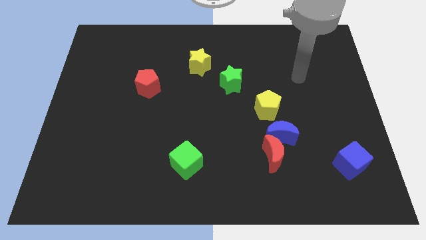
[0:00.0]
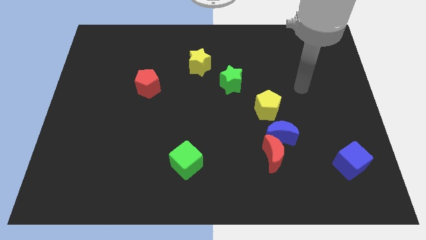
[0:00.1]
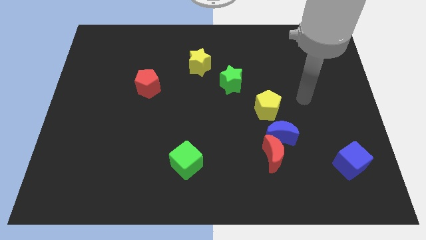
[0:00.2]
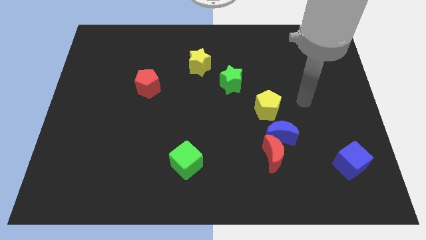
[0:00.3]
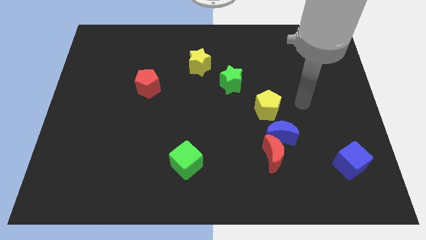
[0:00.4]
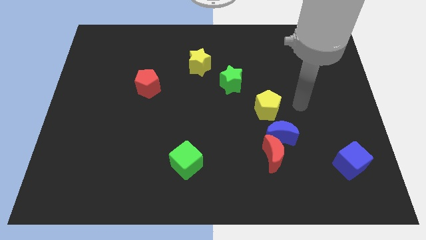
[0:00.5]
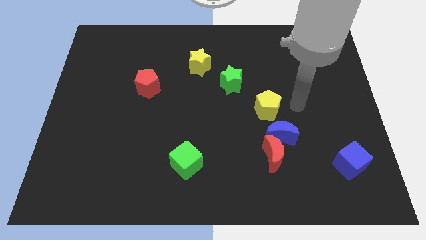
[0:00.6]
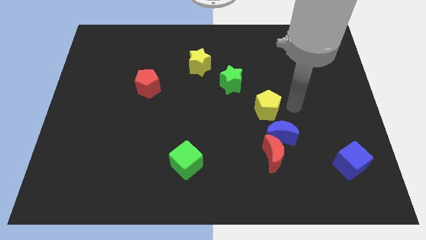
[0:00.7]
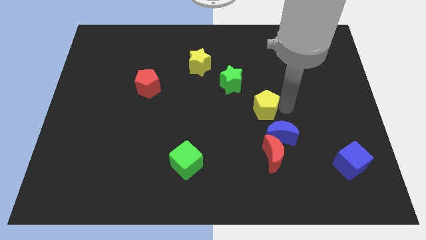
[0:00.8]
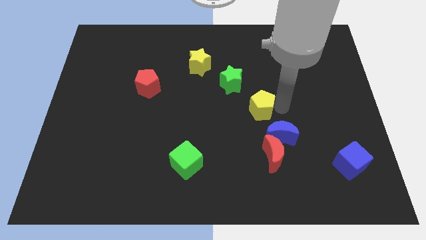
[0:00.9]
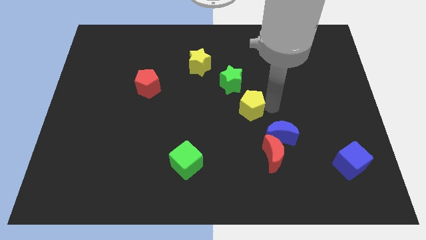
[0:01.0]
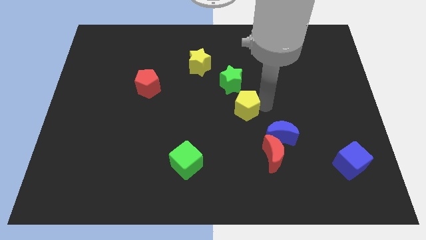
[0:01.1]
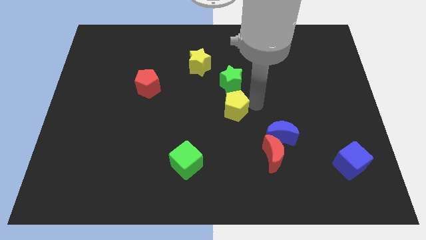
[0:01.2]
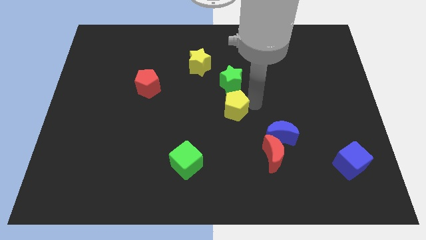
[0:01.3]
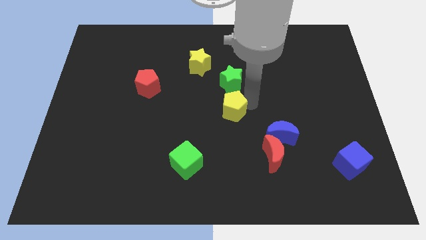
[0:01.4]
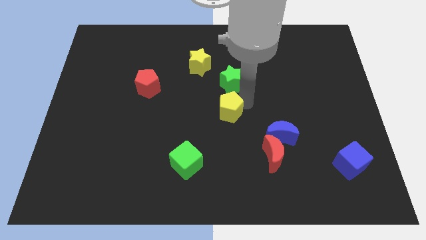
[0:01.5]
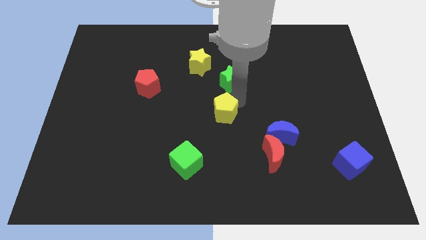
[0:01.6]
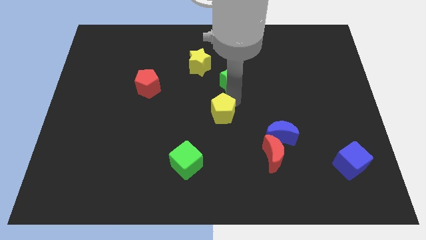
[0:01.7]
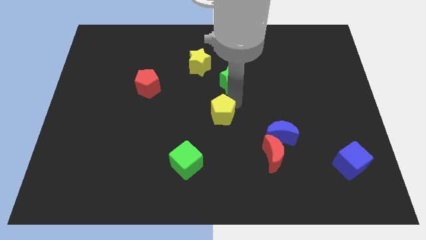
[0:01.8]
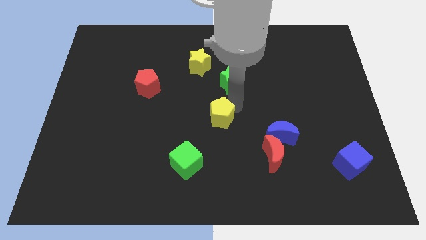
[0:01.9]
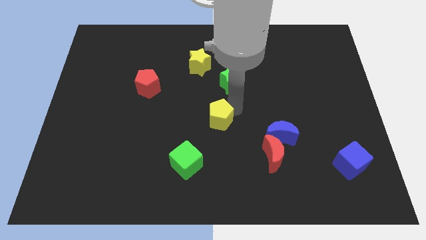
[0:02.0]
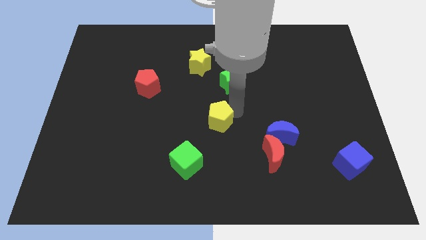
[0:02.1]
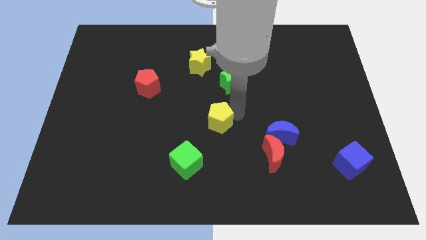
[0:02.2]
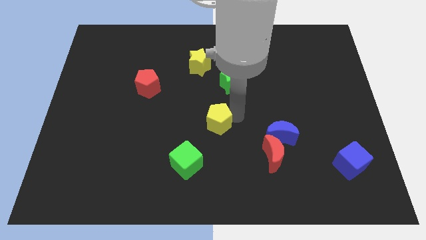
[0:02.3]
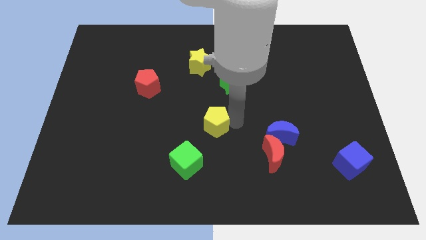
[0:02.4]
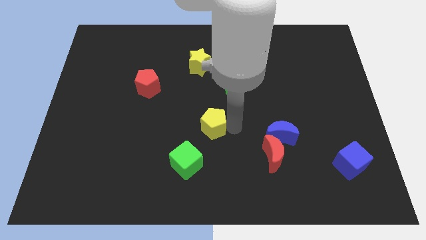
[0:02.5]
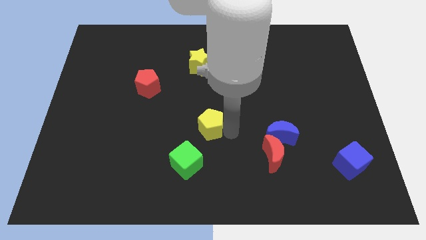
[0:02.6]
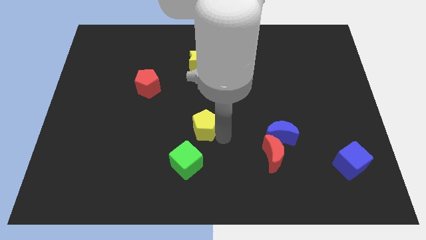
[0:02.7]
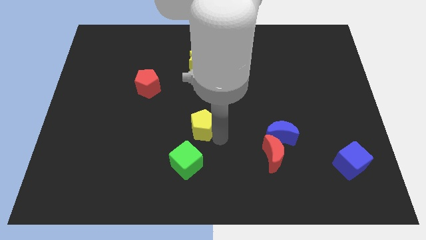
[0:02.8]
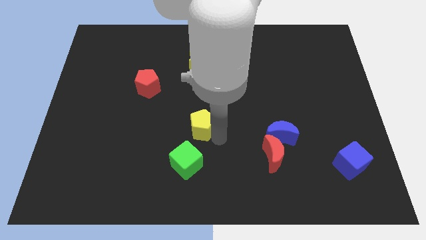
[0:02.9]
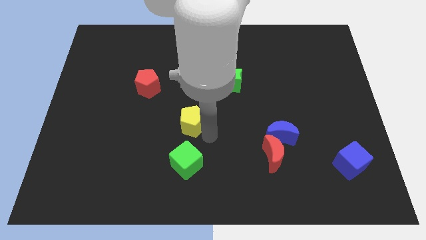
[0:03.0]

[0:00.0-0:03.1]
slide yellow pentagon on top of green cube

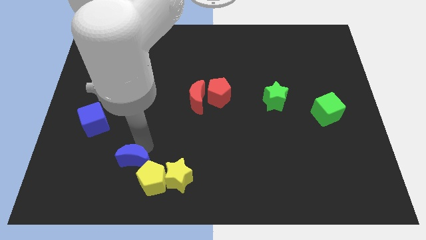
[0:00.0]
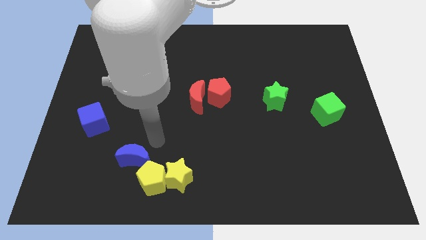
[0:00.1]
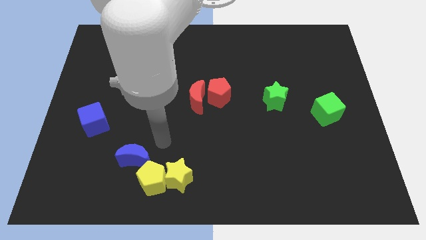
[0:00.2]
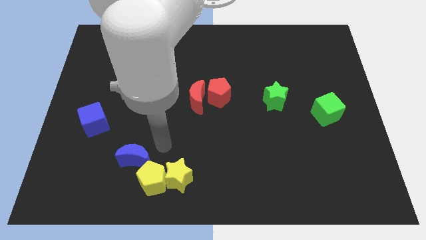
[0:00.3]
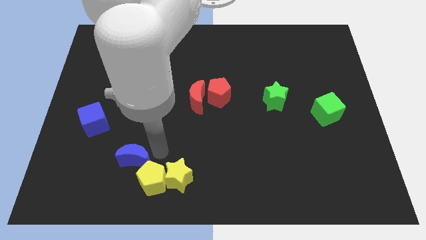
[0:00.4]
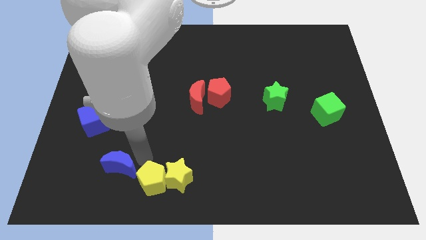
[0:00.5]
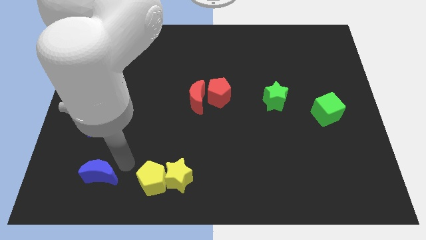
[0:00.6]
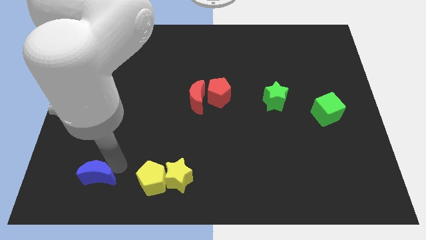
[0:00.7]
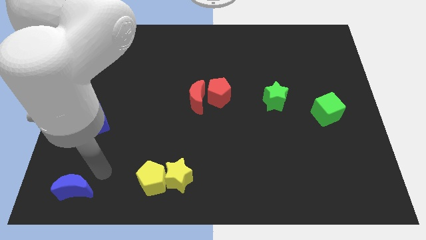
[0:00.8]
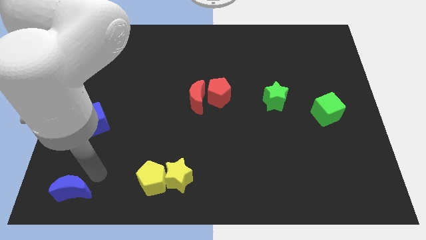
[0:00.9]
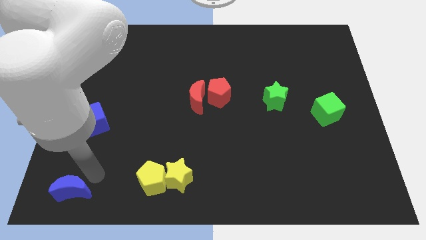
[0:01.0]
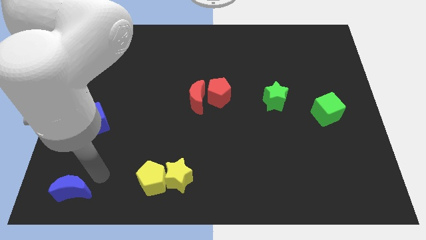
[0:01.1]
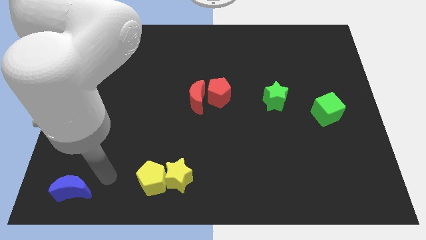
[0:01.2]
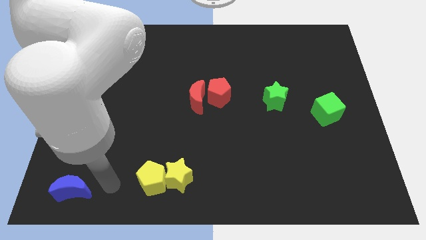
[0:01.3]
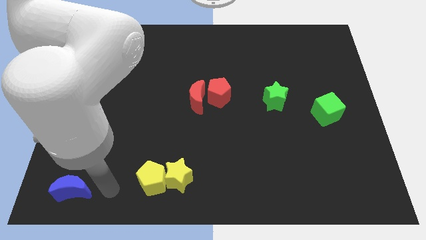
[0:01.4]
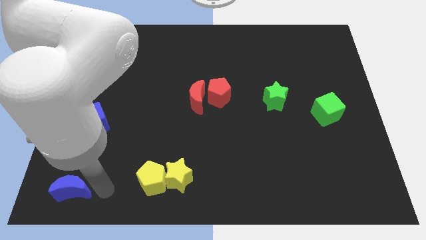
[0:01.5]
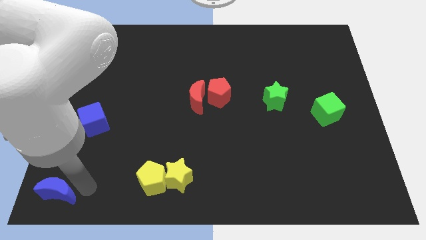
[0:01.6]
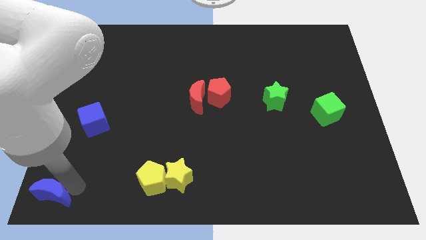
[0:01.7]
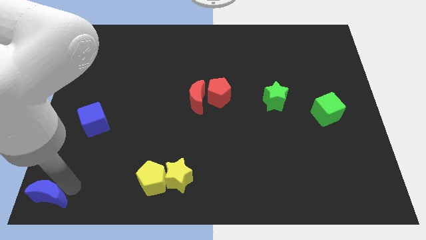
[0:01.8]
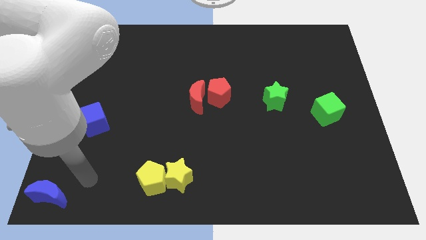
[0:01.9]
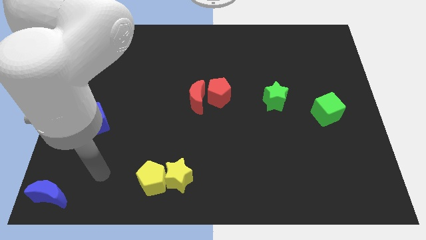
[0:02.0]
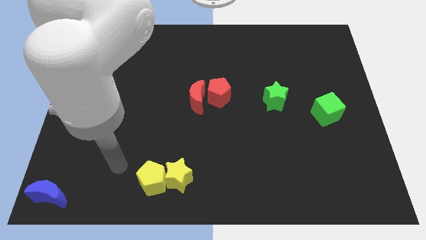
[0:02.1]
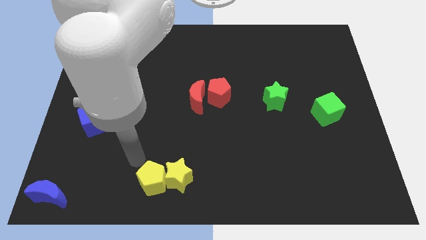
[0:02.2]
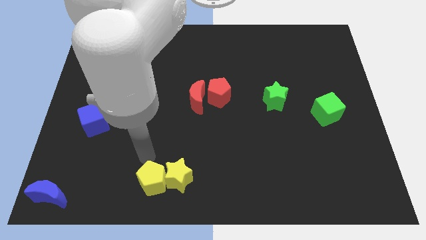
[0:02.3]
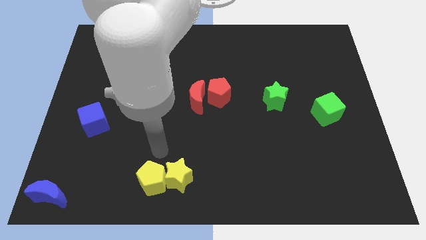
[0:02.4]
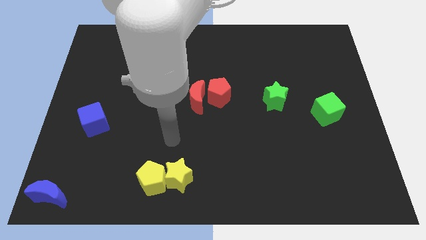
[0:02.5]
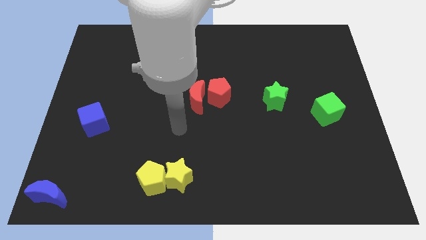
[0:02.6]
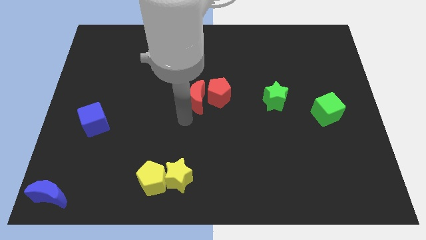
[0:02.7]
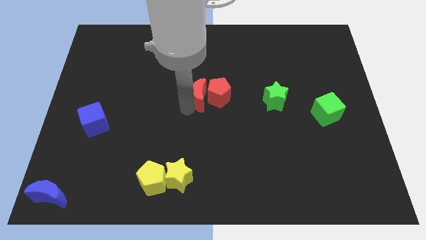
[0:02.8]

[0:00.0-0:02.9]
move blue crescent towards bottom left corner of the board

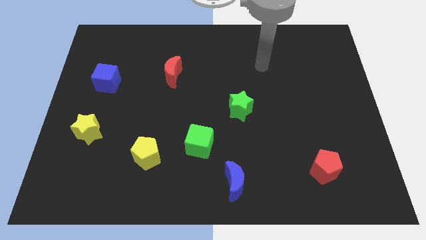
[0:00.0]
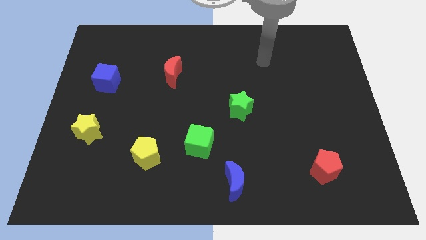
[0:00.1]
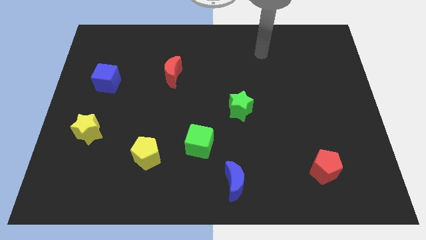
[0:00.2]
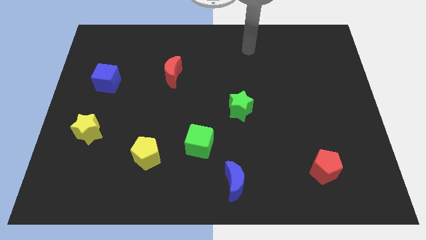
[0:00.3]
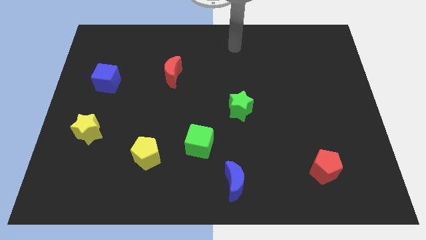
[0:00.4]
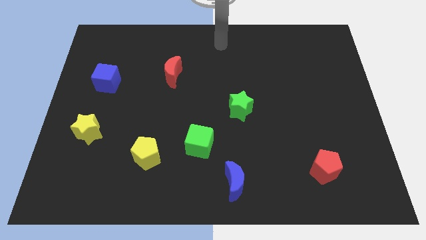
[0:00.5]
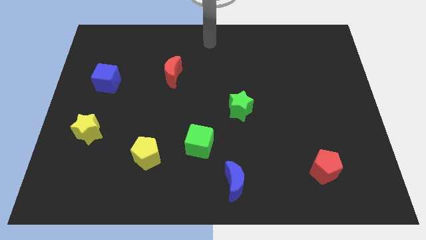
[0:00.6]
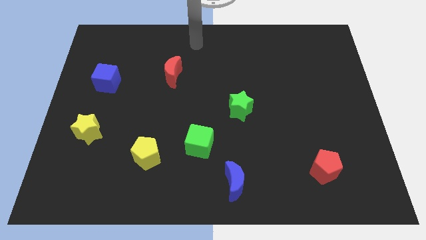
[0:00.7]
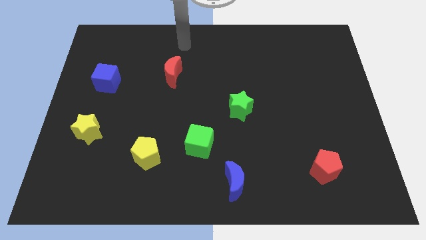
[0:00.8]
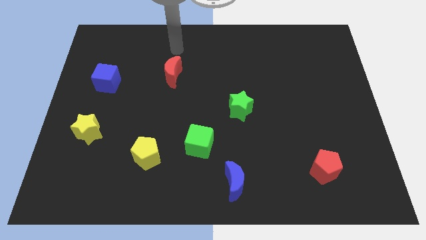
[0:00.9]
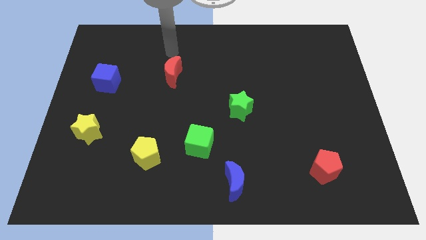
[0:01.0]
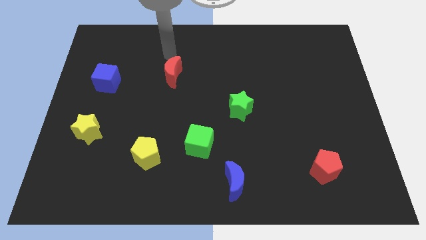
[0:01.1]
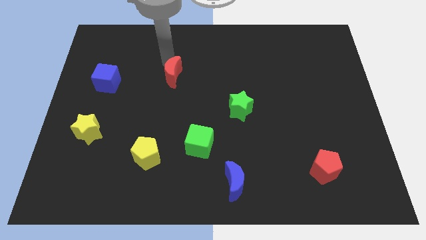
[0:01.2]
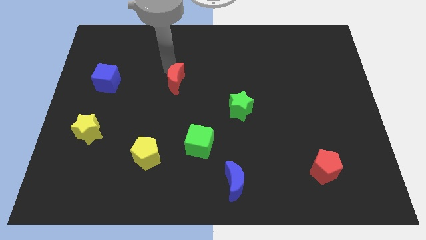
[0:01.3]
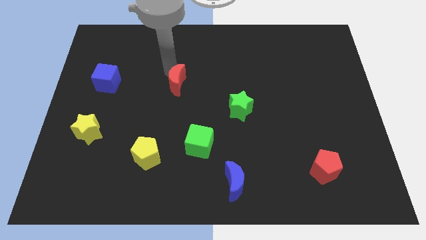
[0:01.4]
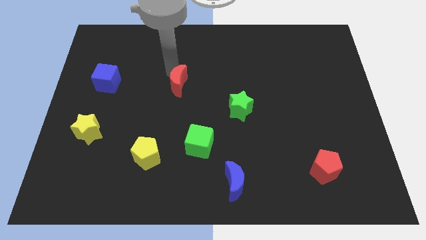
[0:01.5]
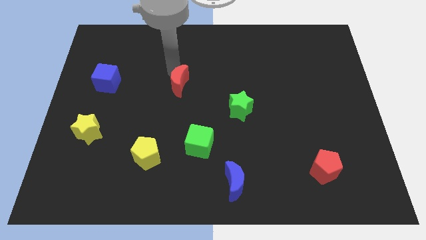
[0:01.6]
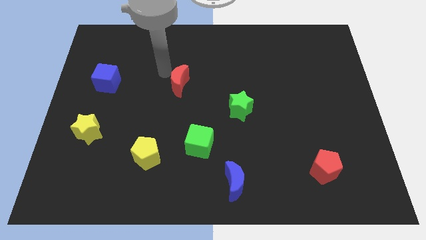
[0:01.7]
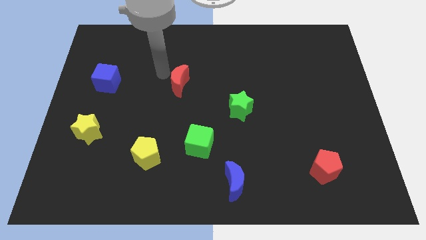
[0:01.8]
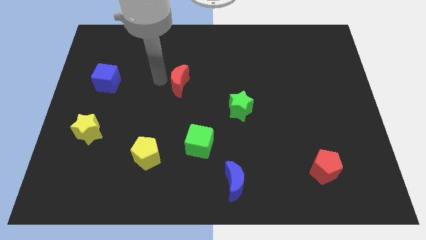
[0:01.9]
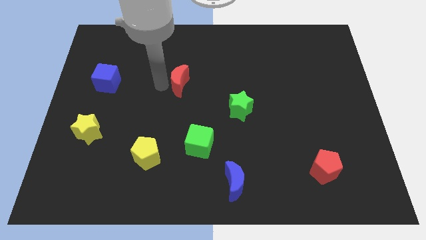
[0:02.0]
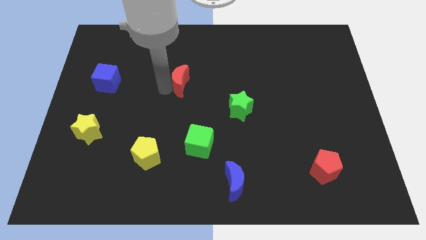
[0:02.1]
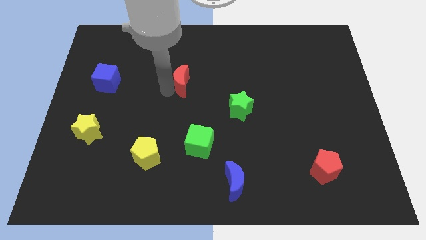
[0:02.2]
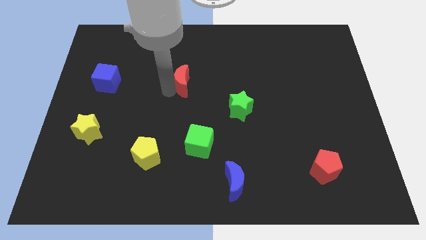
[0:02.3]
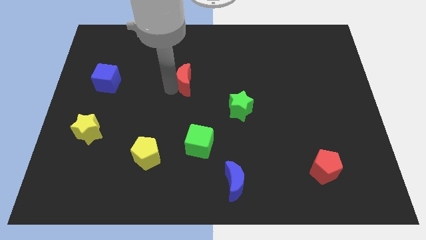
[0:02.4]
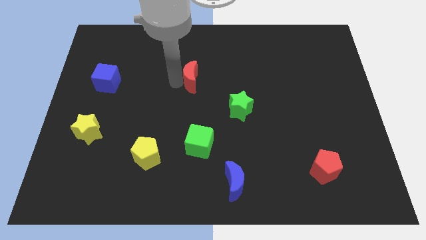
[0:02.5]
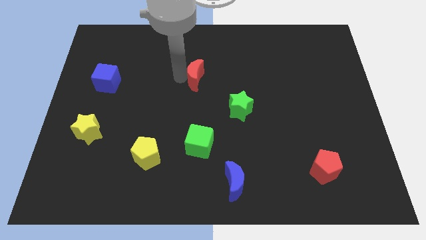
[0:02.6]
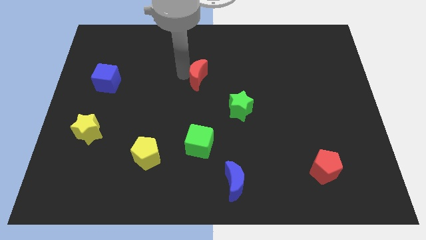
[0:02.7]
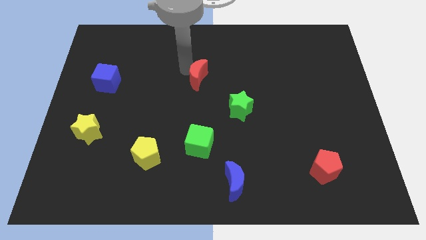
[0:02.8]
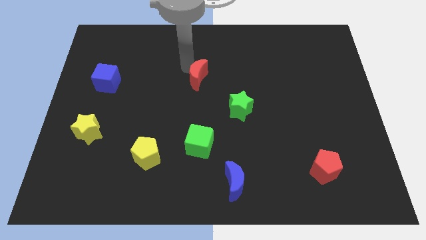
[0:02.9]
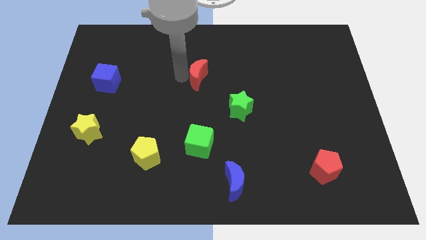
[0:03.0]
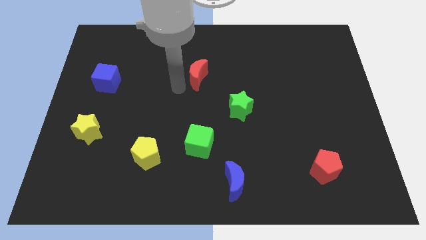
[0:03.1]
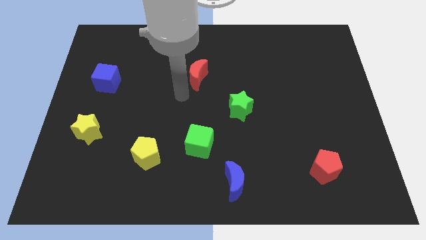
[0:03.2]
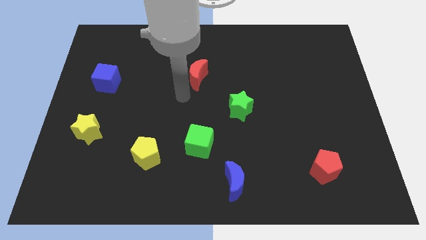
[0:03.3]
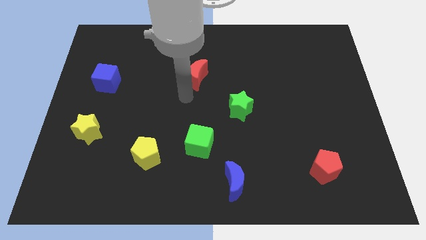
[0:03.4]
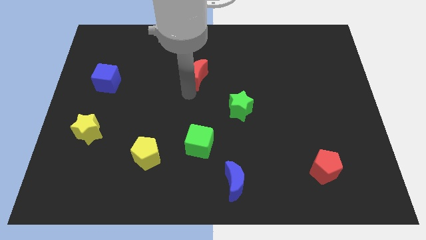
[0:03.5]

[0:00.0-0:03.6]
push the red crescent to the right of the board
